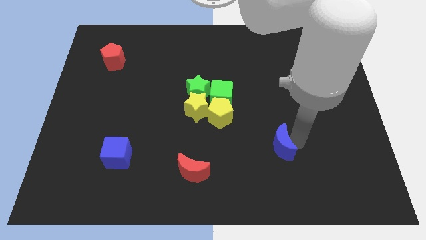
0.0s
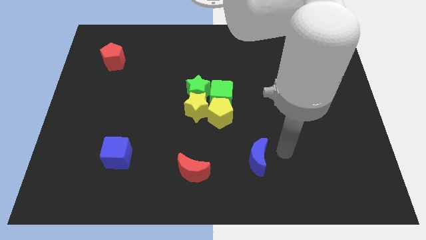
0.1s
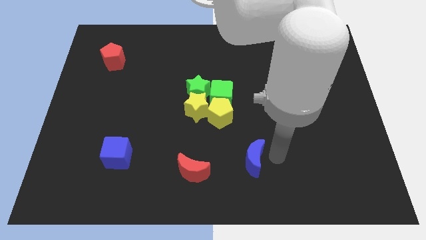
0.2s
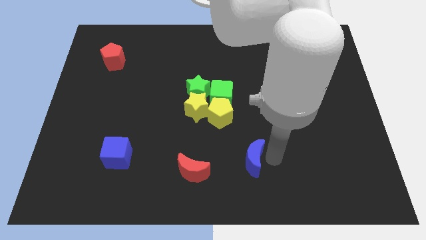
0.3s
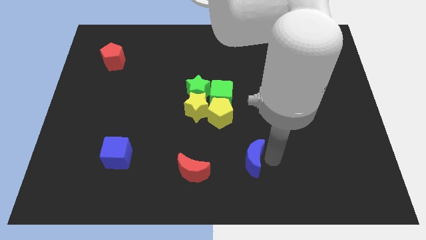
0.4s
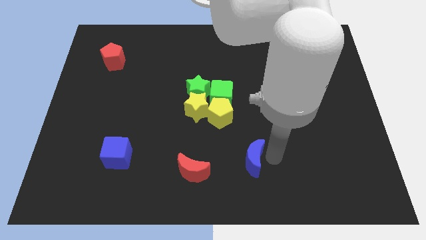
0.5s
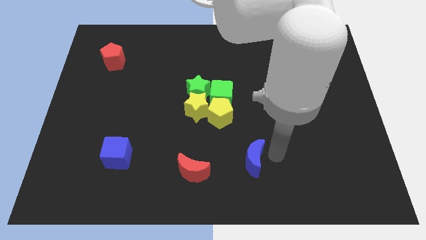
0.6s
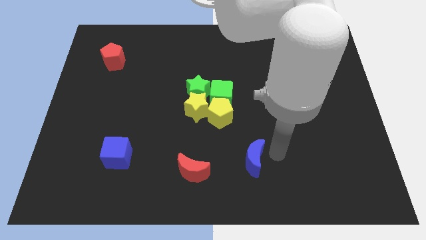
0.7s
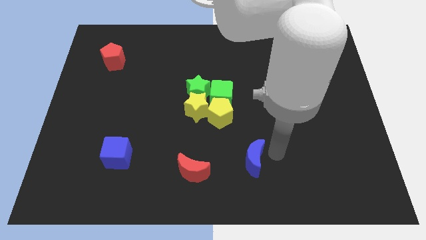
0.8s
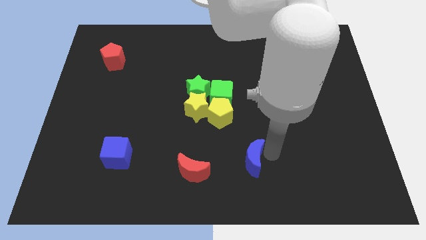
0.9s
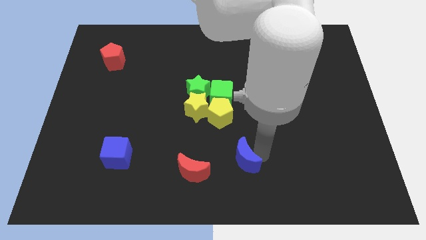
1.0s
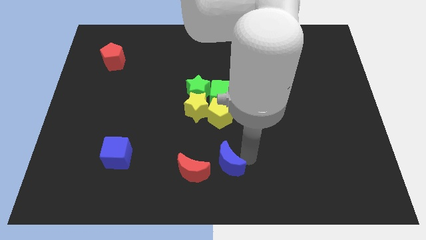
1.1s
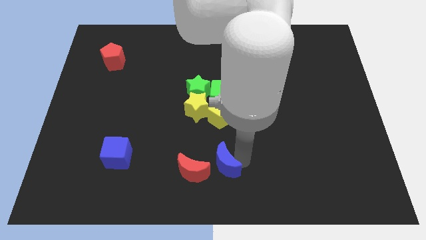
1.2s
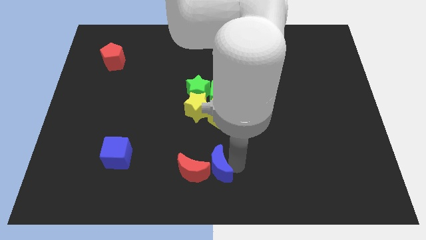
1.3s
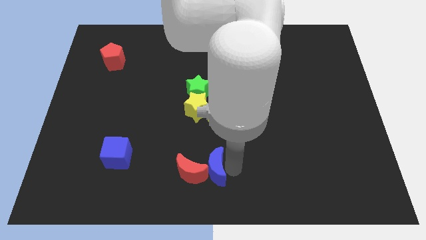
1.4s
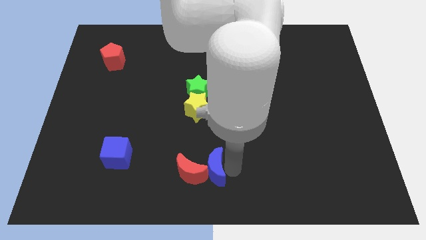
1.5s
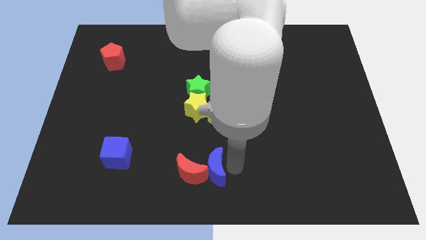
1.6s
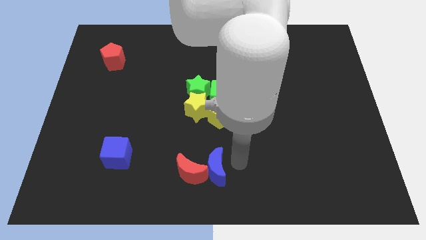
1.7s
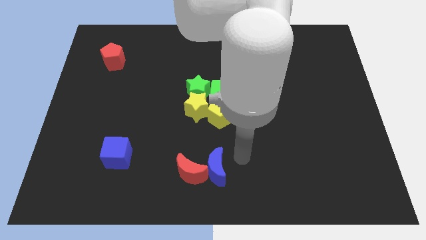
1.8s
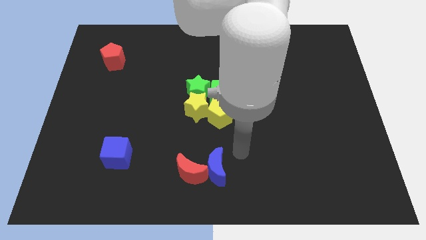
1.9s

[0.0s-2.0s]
push the blue moon into the red moon

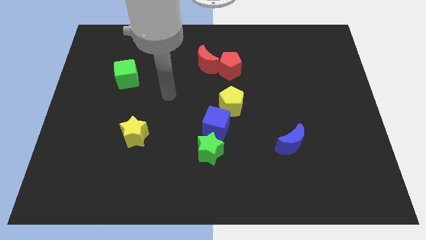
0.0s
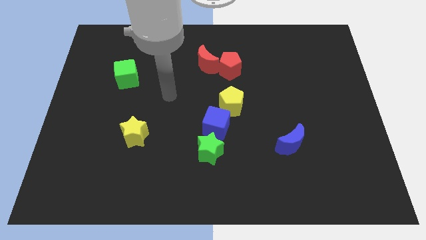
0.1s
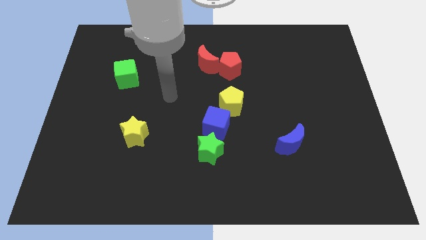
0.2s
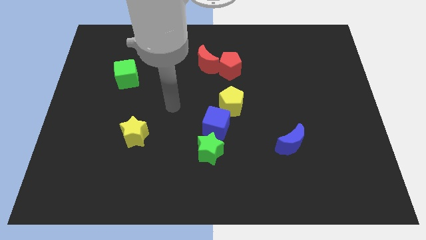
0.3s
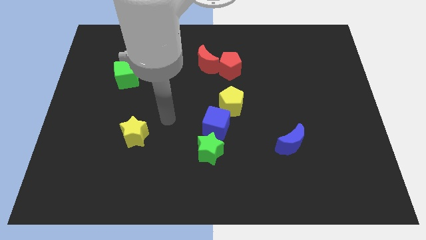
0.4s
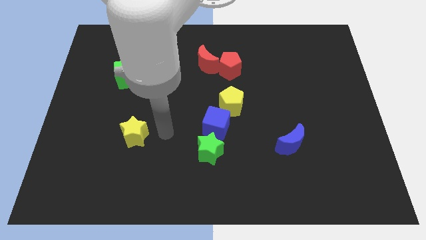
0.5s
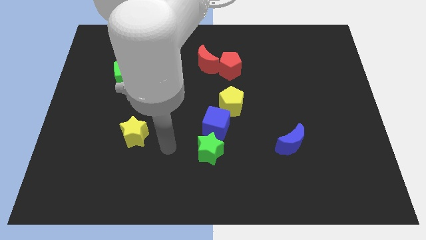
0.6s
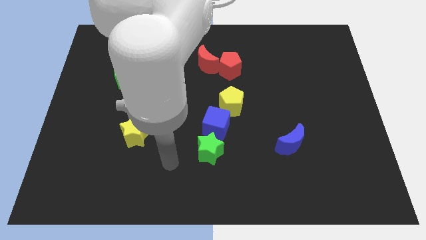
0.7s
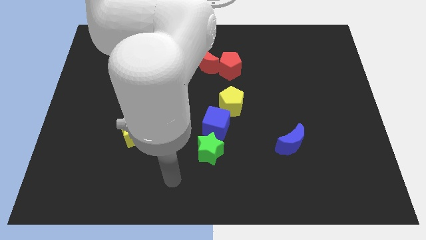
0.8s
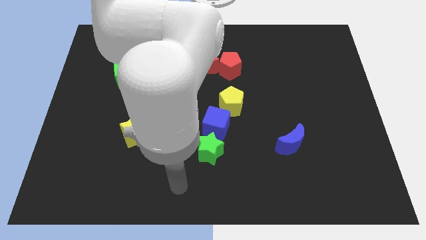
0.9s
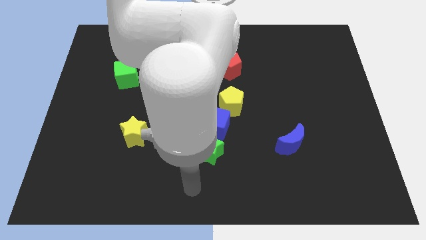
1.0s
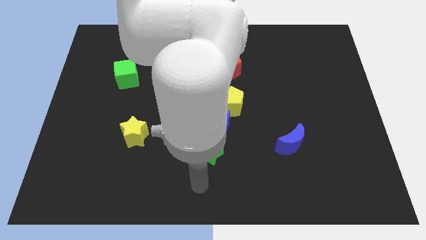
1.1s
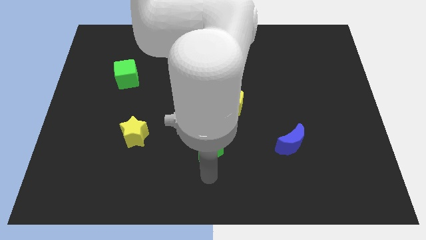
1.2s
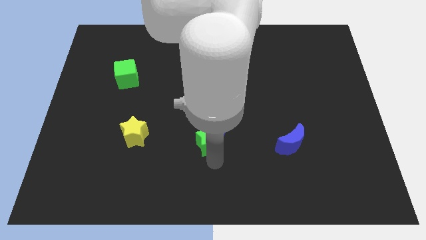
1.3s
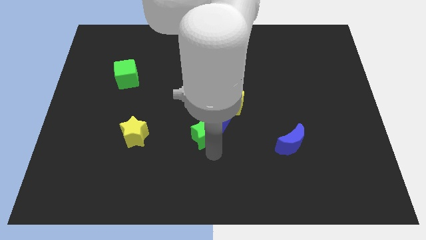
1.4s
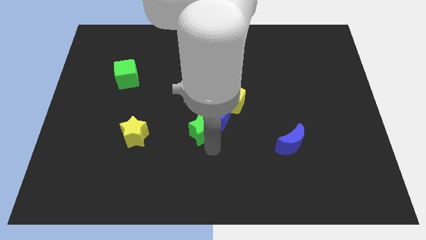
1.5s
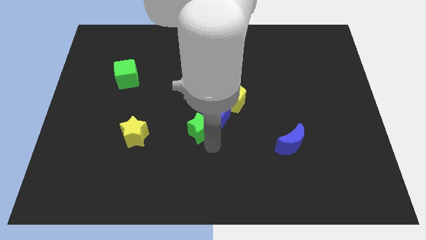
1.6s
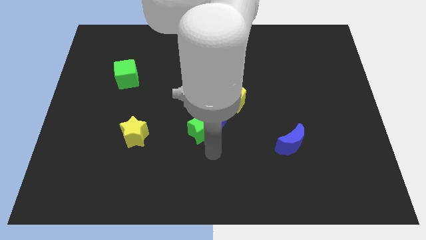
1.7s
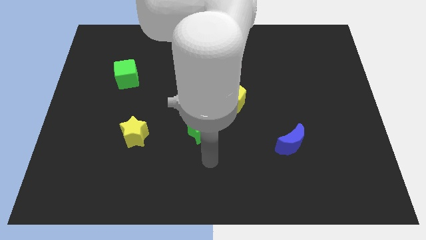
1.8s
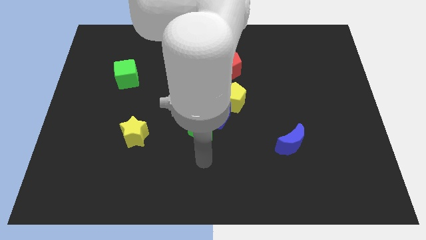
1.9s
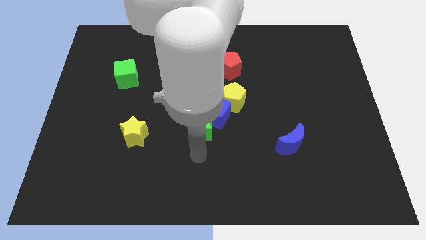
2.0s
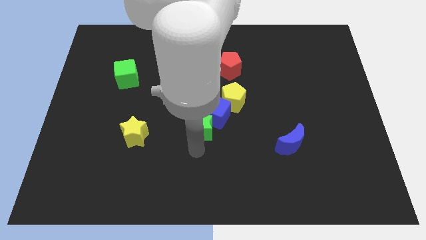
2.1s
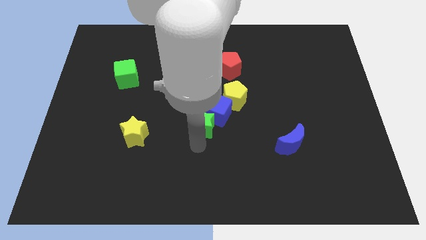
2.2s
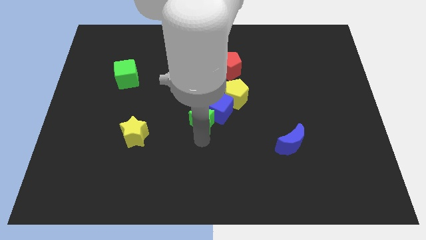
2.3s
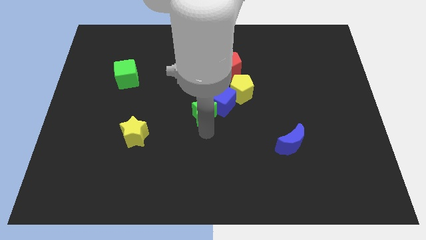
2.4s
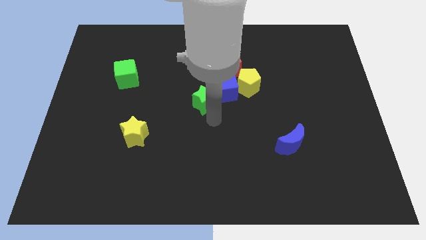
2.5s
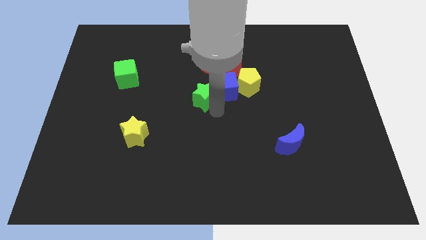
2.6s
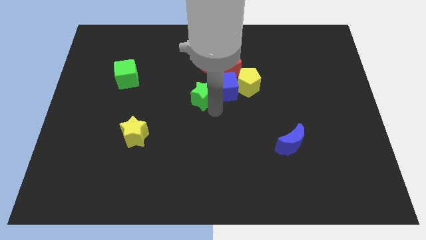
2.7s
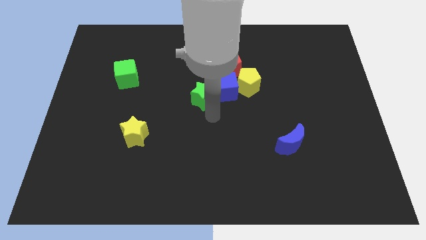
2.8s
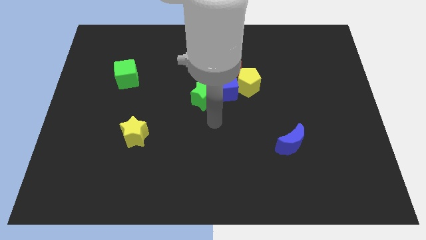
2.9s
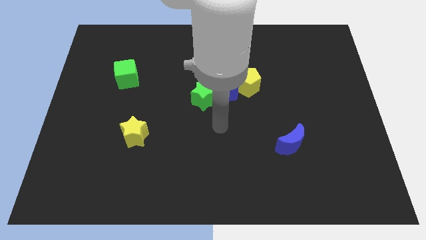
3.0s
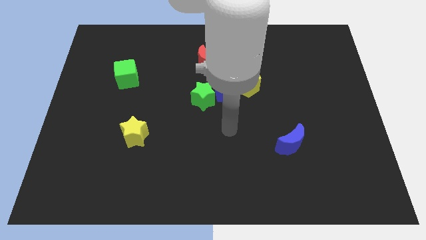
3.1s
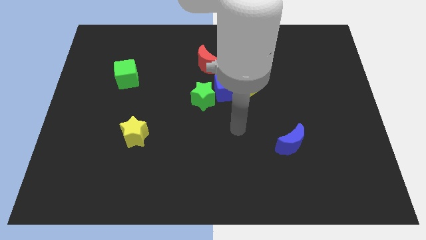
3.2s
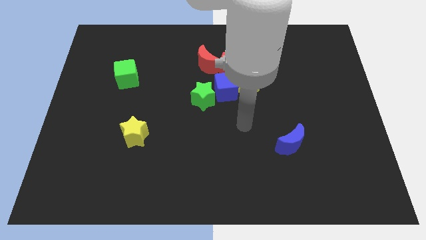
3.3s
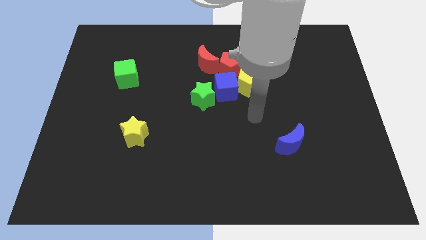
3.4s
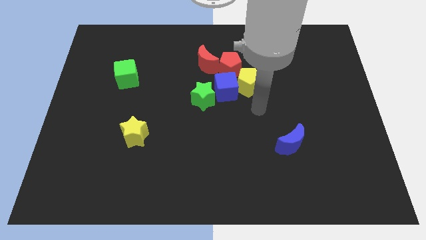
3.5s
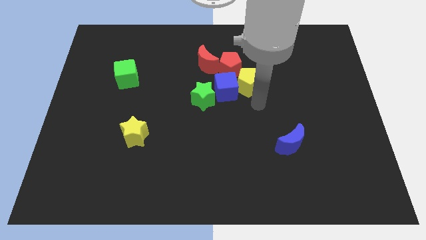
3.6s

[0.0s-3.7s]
move the blue cube slightly bottom of the red pentagon

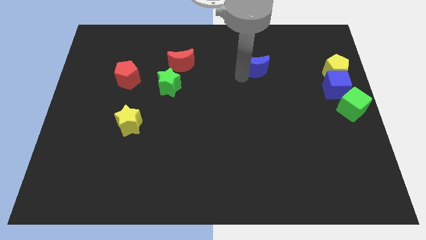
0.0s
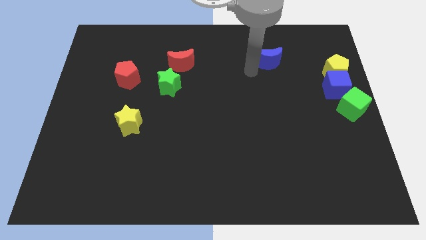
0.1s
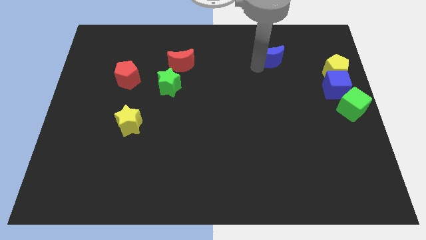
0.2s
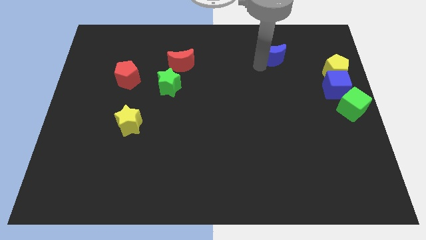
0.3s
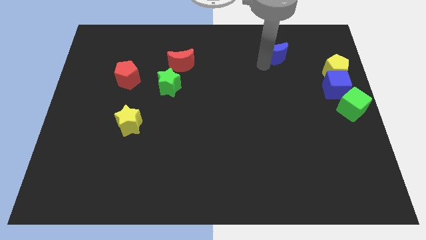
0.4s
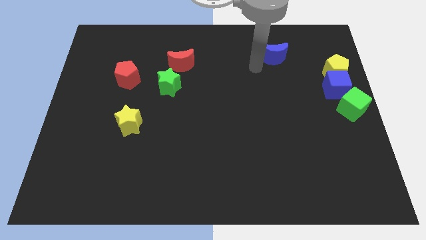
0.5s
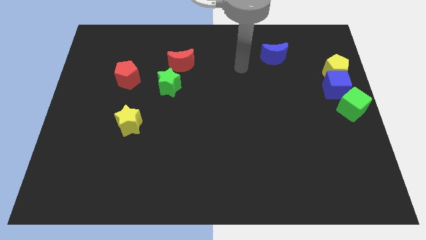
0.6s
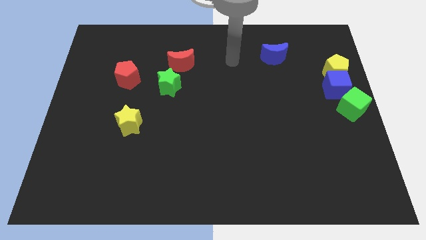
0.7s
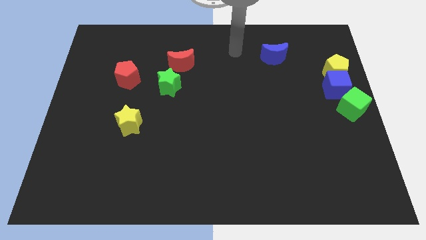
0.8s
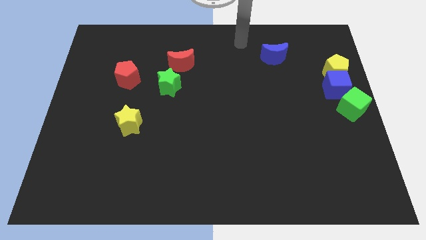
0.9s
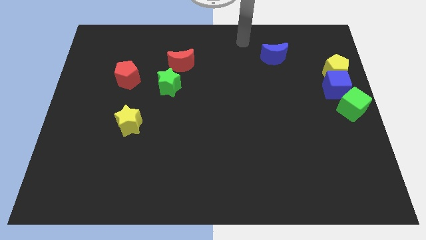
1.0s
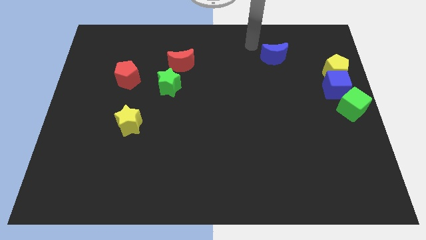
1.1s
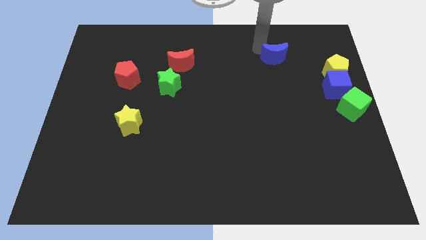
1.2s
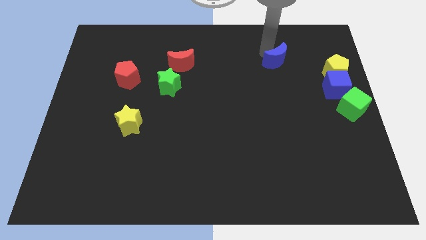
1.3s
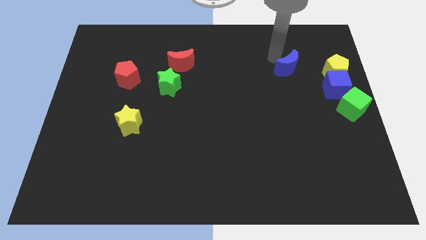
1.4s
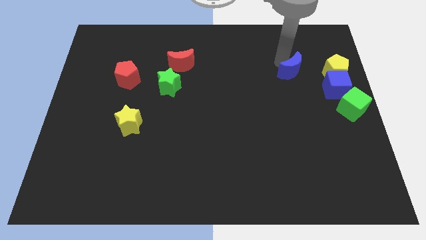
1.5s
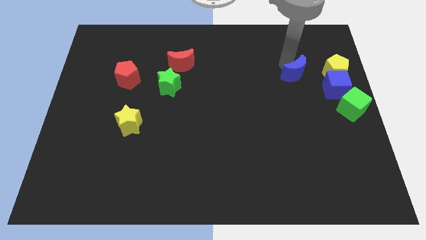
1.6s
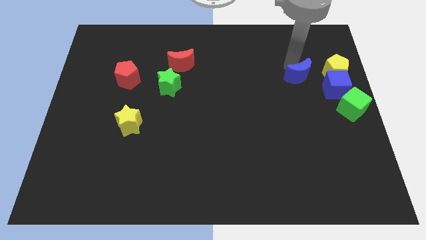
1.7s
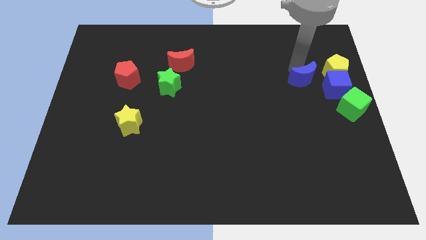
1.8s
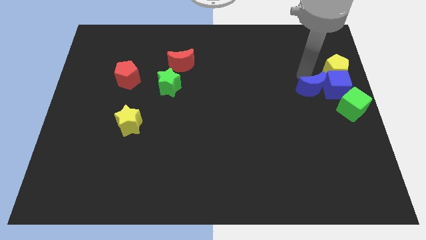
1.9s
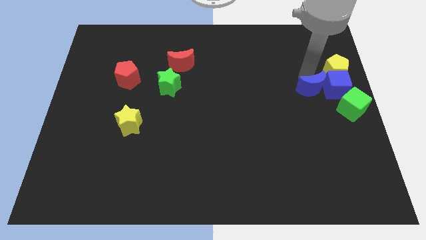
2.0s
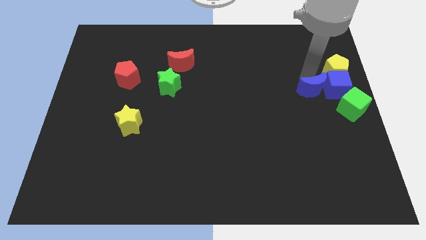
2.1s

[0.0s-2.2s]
slide blue moon to the left of blue cube

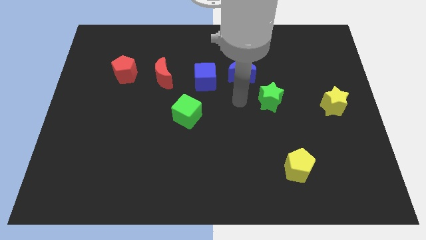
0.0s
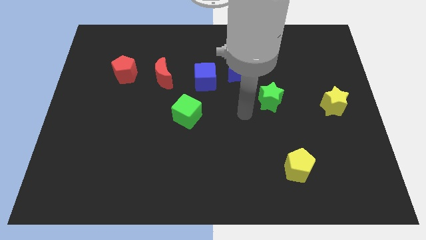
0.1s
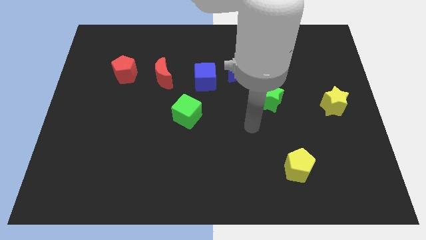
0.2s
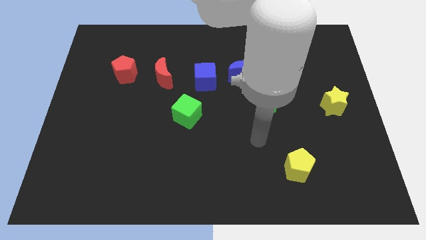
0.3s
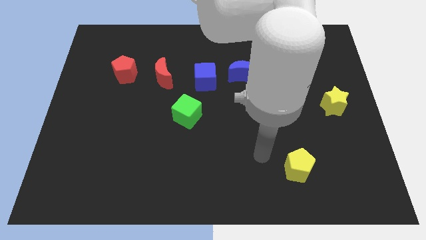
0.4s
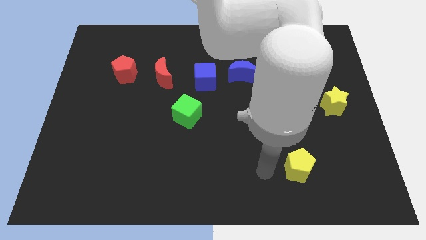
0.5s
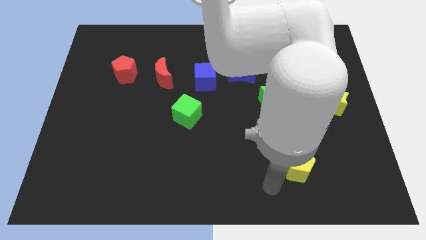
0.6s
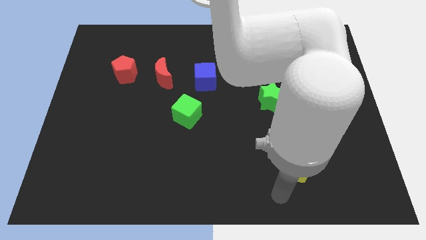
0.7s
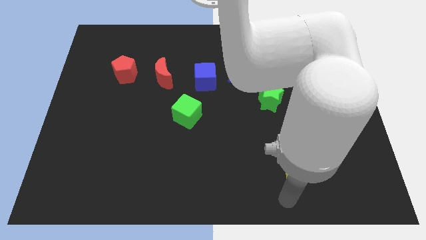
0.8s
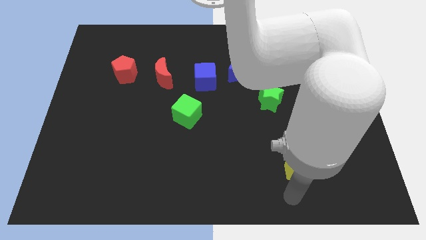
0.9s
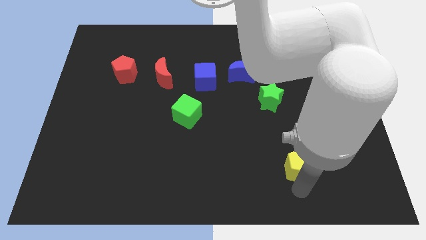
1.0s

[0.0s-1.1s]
move the arm towards the yellow pentagon

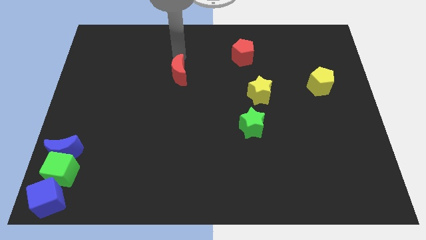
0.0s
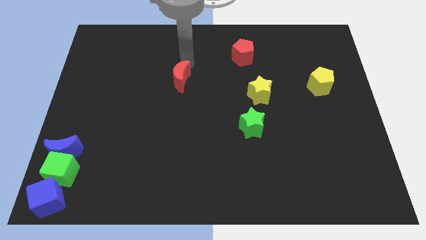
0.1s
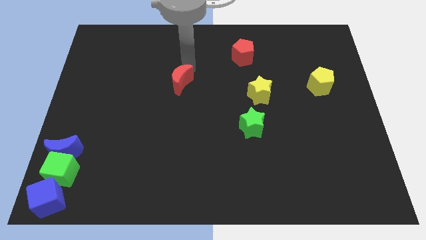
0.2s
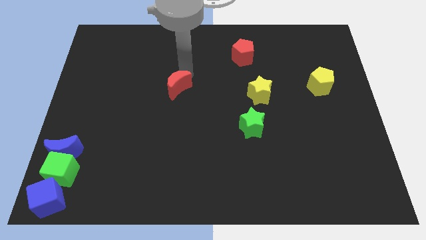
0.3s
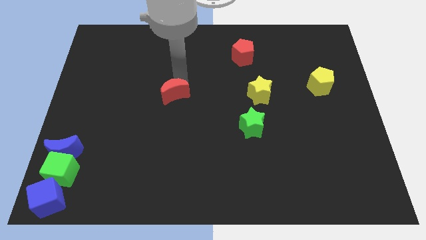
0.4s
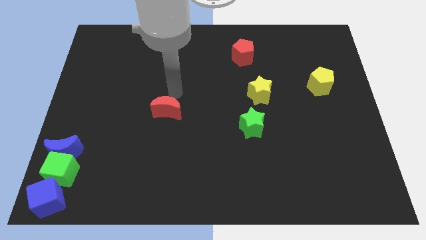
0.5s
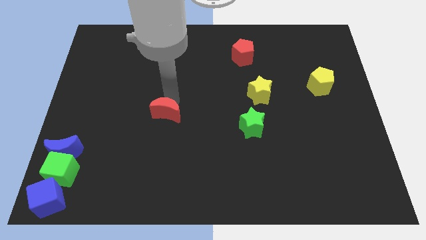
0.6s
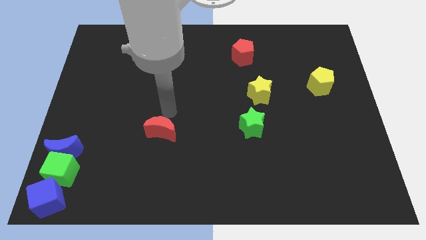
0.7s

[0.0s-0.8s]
push the red moon towards the bottom side of the board
